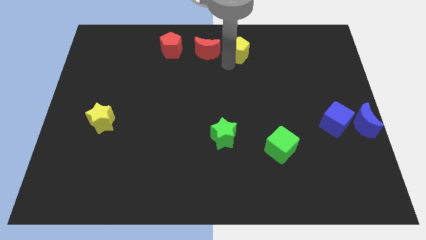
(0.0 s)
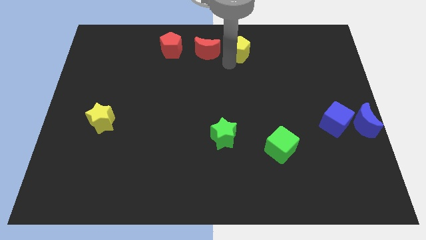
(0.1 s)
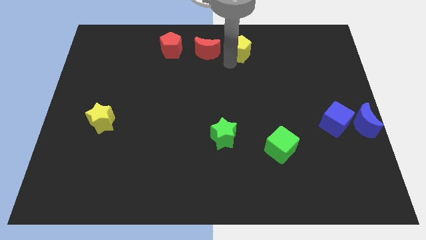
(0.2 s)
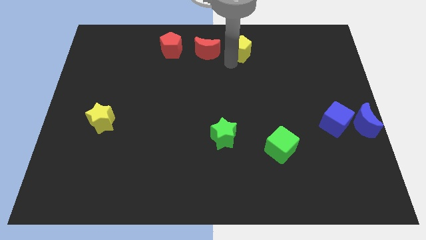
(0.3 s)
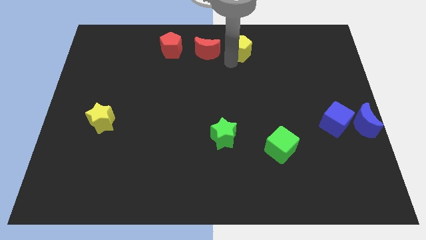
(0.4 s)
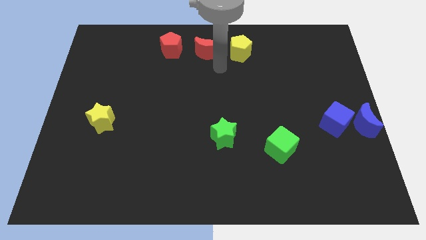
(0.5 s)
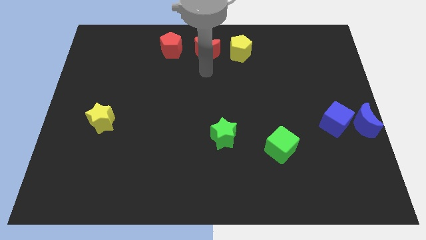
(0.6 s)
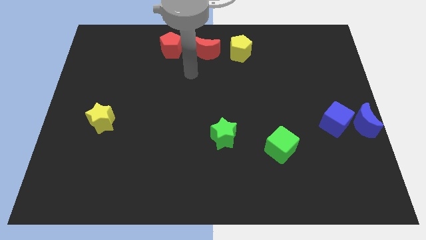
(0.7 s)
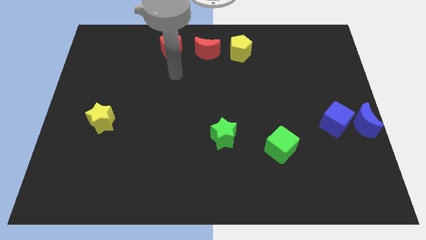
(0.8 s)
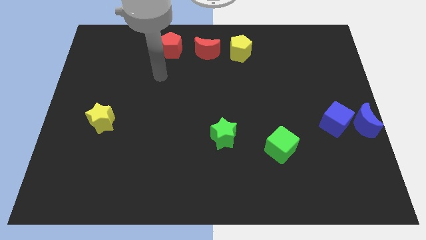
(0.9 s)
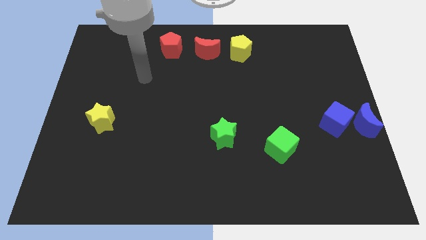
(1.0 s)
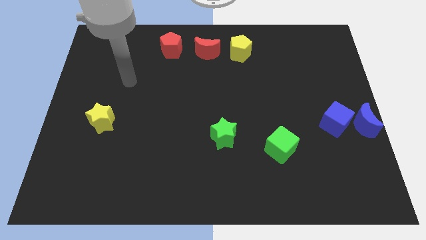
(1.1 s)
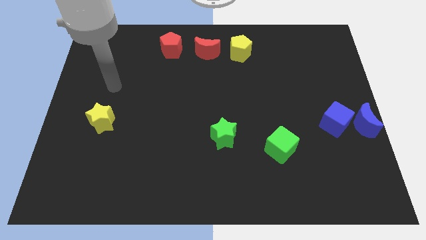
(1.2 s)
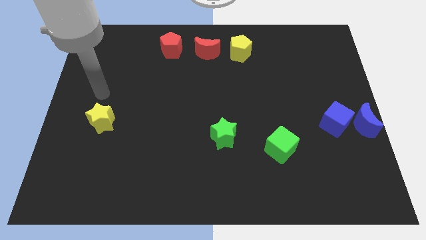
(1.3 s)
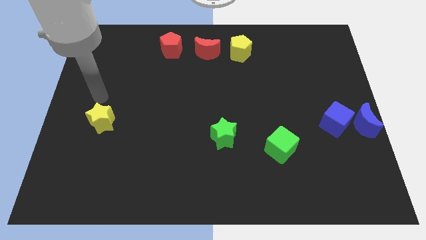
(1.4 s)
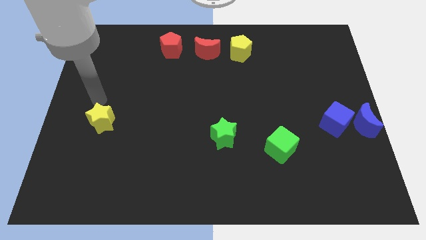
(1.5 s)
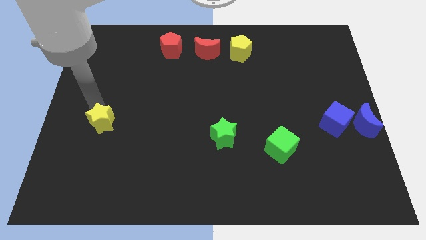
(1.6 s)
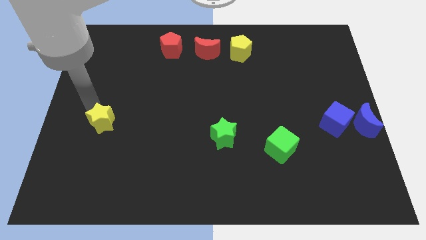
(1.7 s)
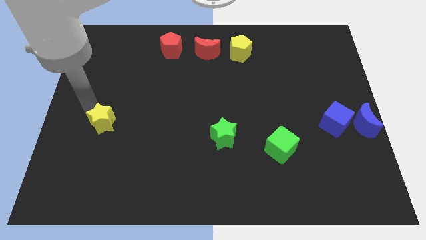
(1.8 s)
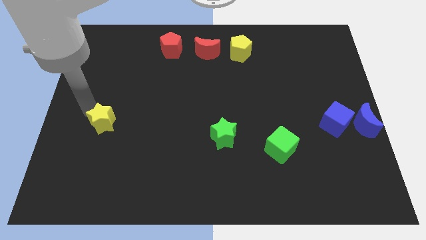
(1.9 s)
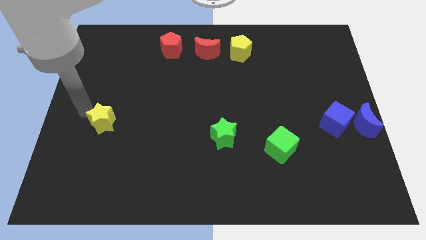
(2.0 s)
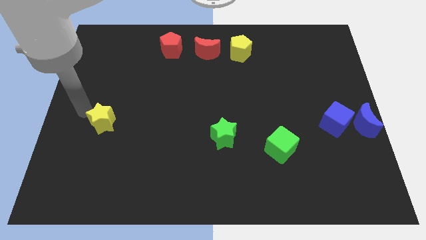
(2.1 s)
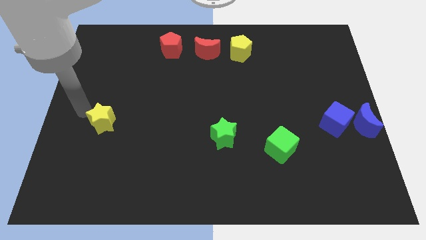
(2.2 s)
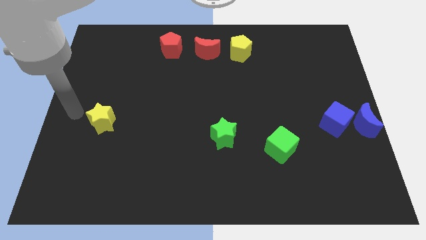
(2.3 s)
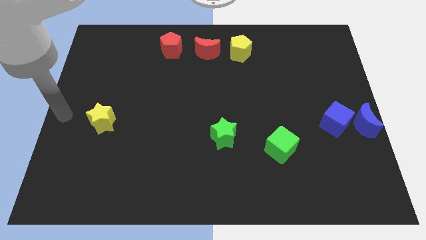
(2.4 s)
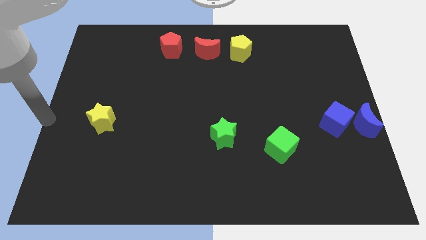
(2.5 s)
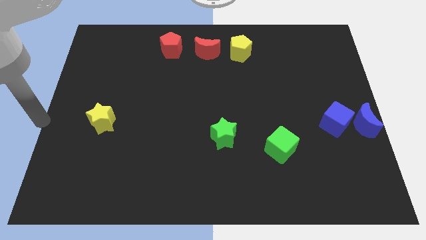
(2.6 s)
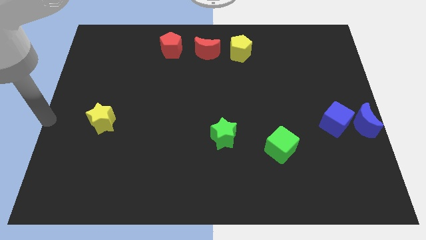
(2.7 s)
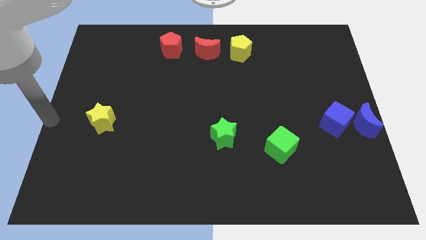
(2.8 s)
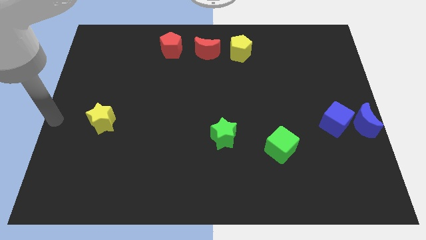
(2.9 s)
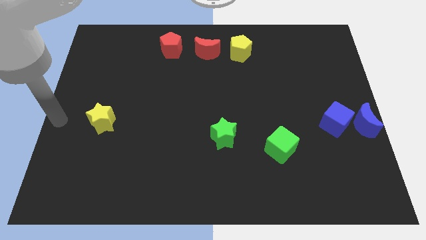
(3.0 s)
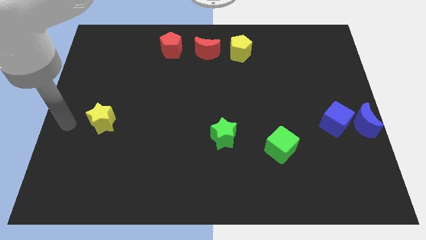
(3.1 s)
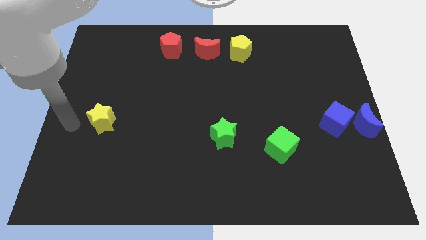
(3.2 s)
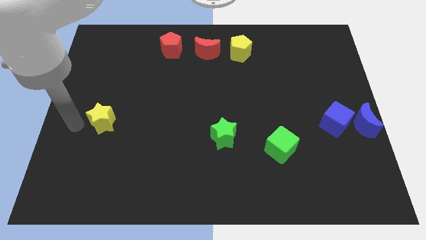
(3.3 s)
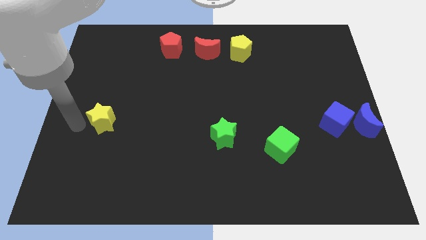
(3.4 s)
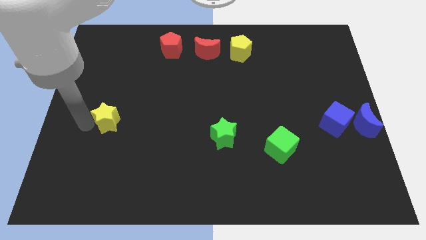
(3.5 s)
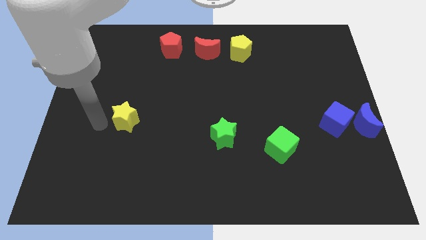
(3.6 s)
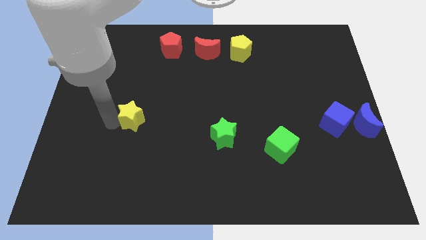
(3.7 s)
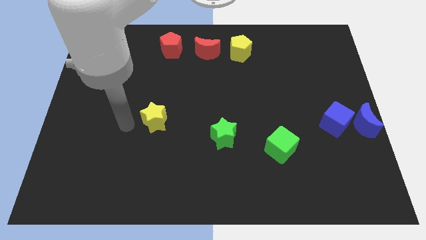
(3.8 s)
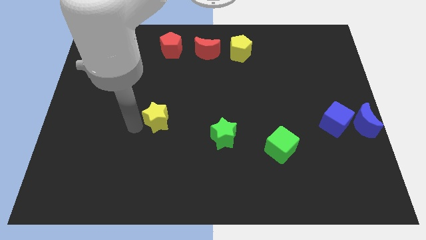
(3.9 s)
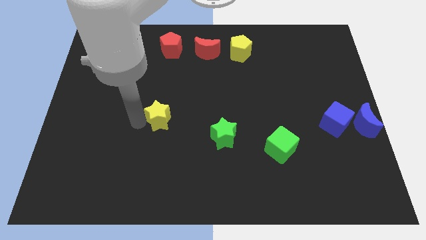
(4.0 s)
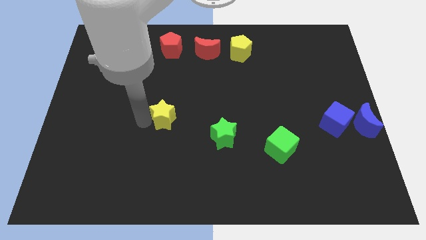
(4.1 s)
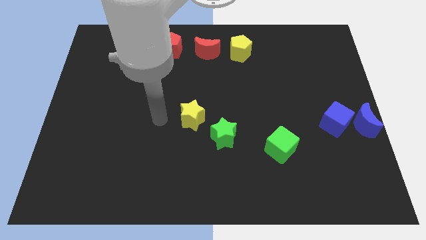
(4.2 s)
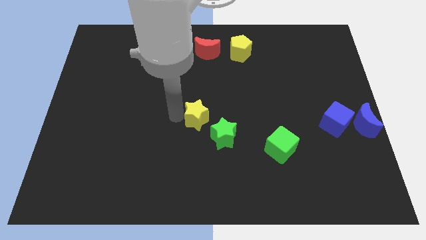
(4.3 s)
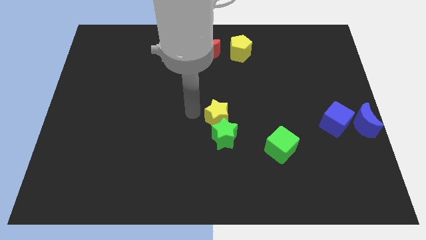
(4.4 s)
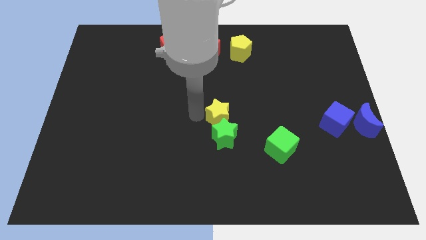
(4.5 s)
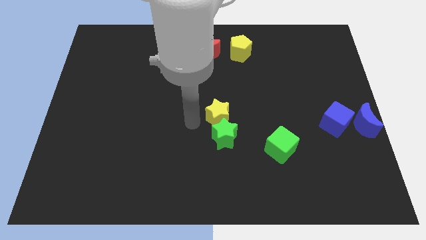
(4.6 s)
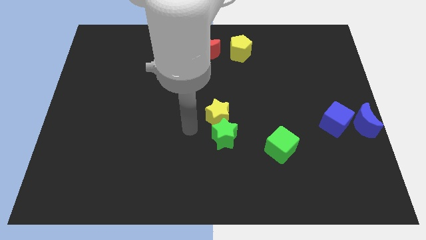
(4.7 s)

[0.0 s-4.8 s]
push the yellow star above the green star

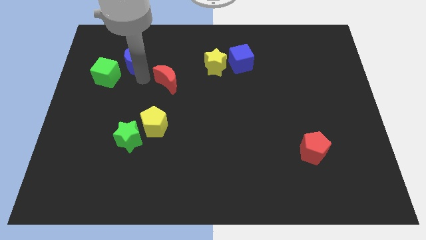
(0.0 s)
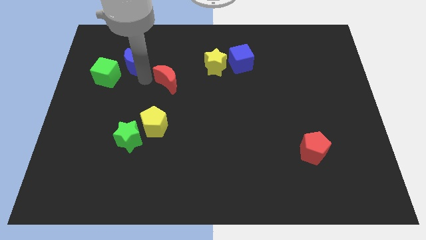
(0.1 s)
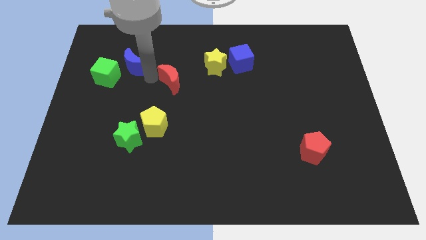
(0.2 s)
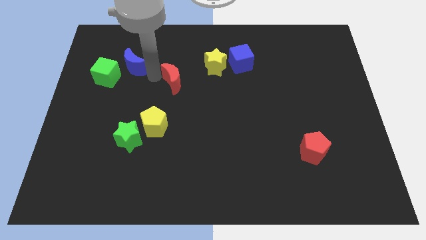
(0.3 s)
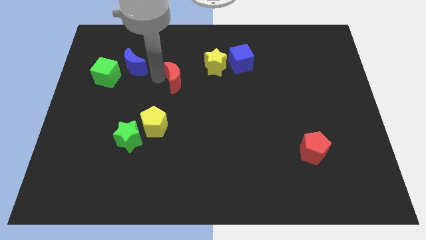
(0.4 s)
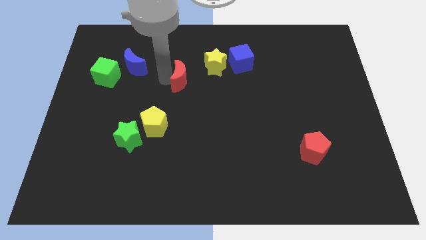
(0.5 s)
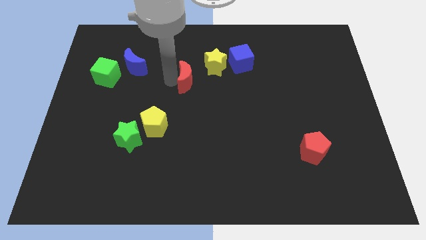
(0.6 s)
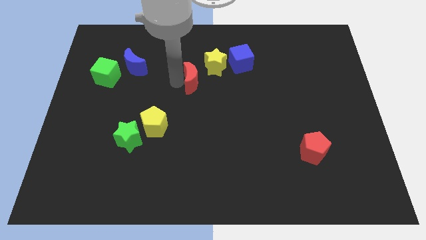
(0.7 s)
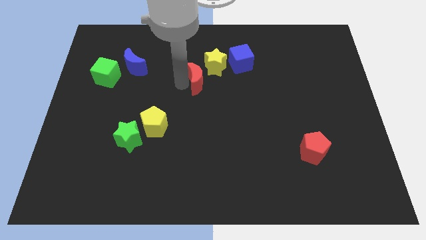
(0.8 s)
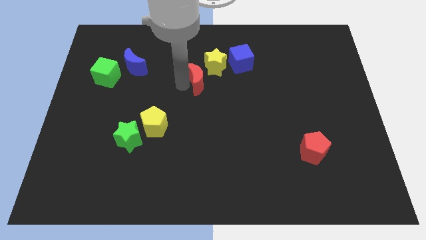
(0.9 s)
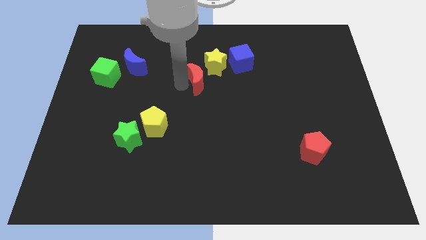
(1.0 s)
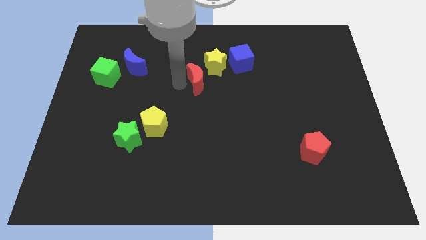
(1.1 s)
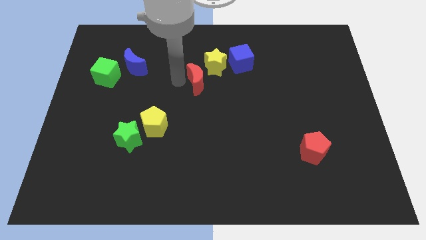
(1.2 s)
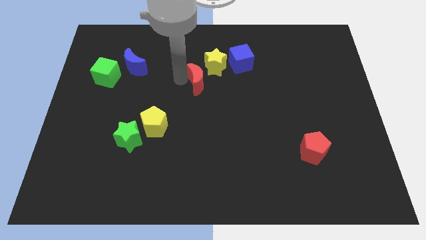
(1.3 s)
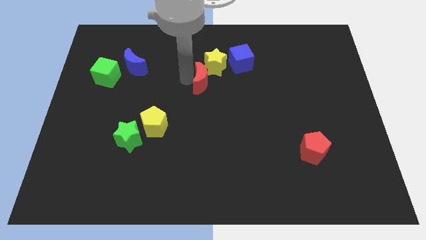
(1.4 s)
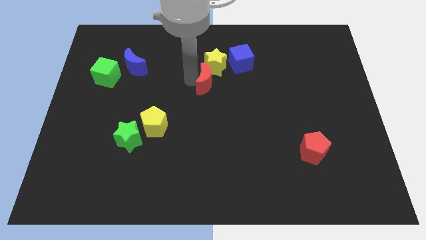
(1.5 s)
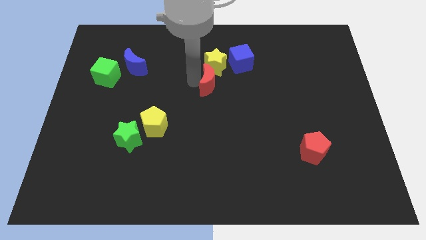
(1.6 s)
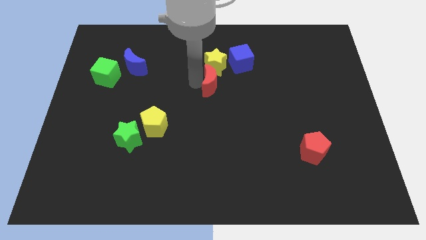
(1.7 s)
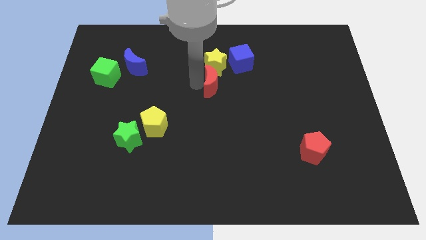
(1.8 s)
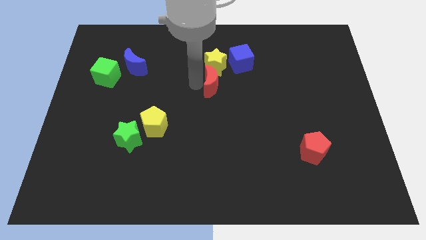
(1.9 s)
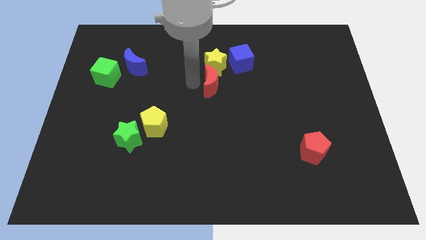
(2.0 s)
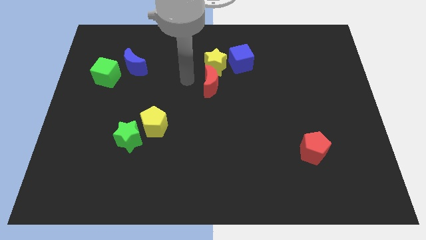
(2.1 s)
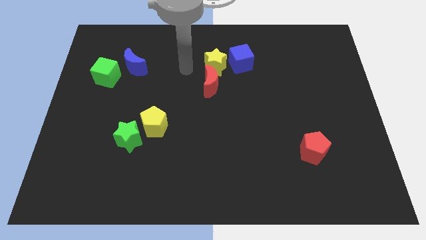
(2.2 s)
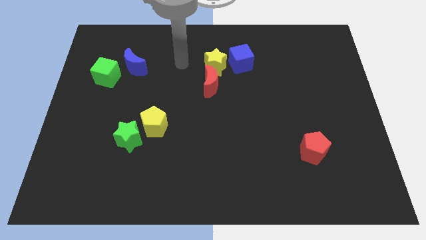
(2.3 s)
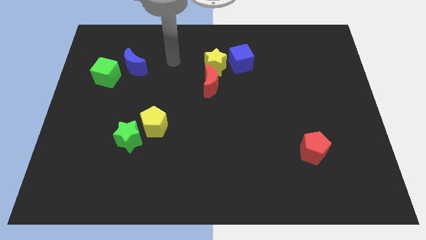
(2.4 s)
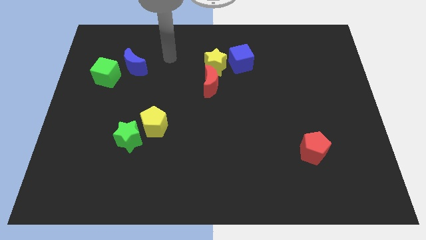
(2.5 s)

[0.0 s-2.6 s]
move the red crescent to the bottom of the yellow star

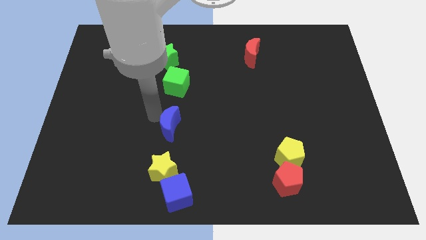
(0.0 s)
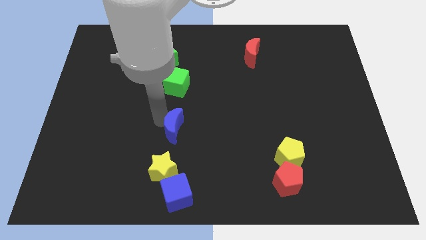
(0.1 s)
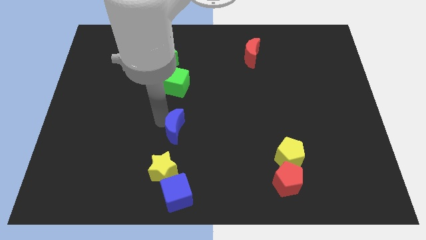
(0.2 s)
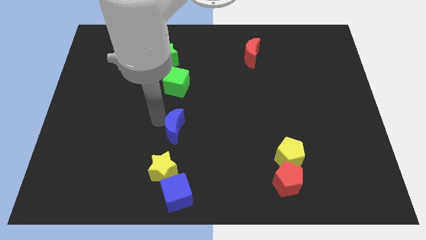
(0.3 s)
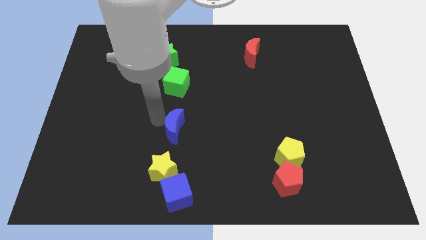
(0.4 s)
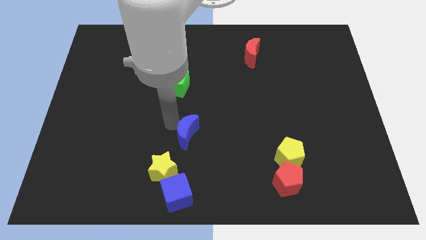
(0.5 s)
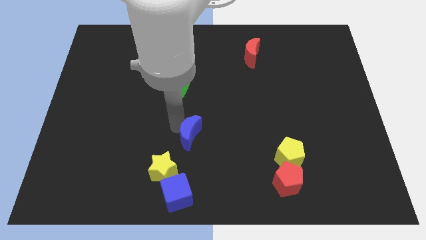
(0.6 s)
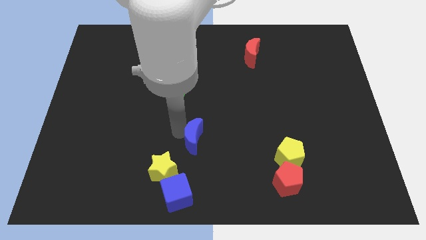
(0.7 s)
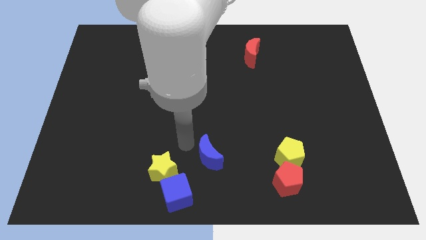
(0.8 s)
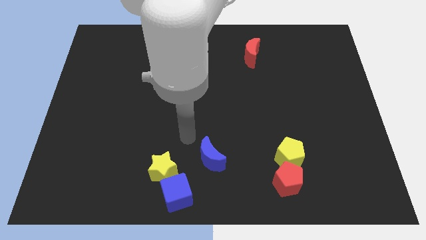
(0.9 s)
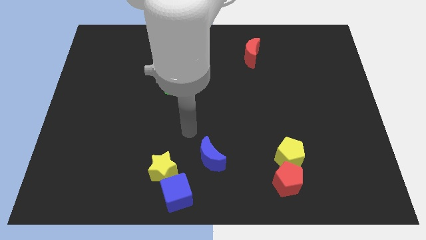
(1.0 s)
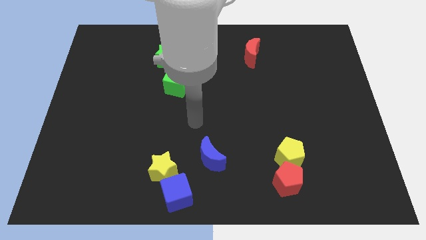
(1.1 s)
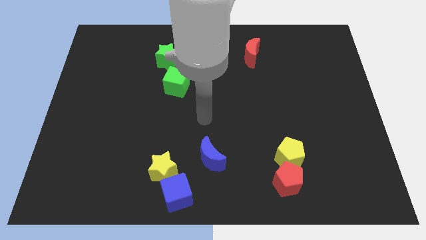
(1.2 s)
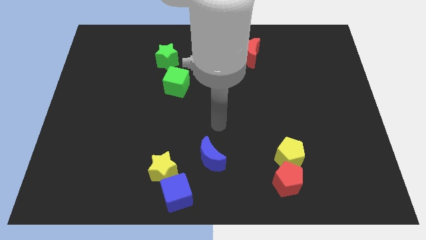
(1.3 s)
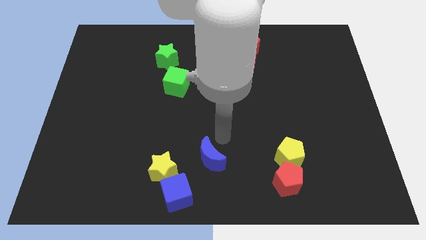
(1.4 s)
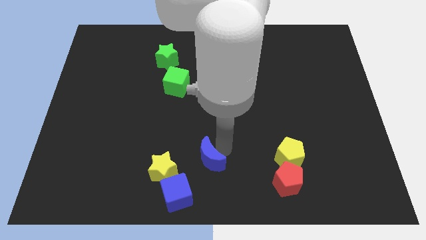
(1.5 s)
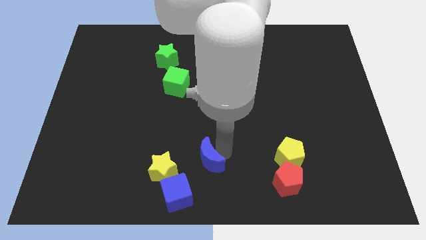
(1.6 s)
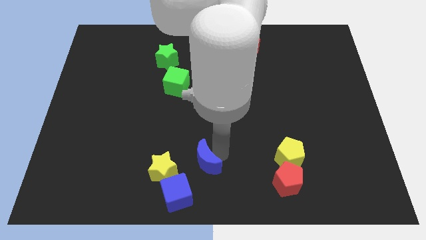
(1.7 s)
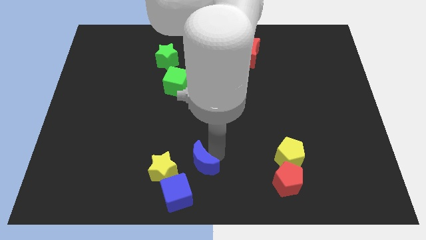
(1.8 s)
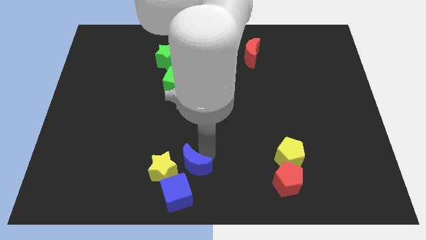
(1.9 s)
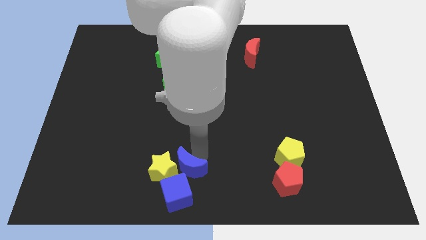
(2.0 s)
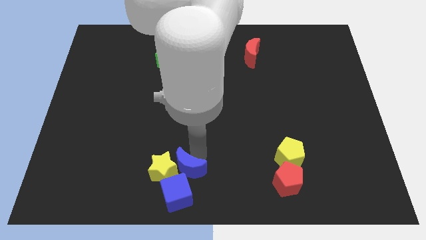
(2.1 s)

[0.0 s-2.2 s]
place the blue crescent to right side of the yellow star
